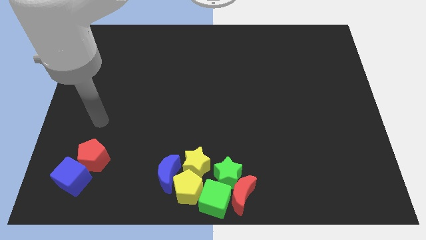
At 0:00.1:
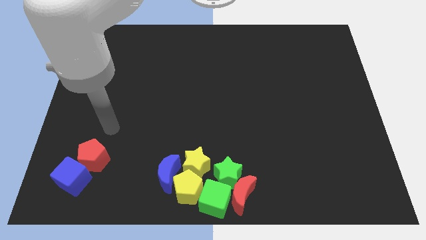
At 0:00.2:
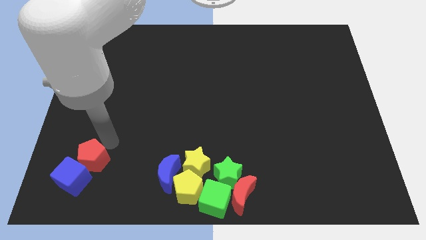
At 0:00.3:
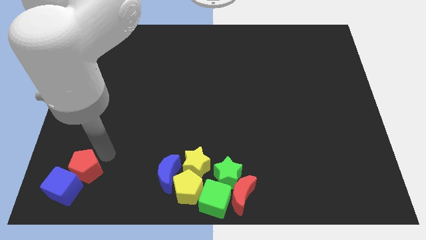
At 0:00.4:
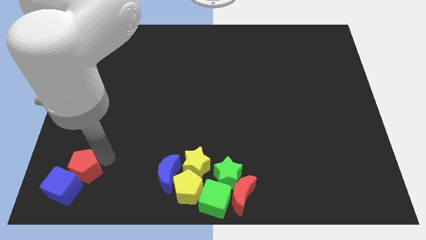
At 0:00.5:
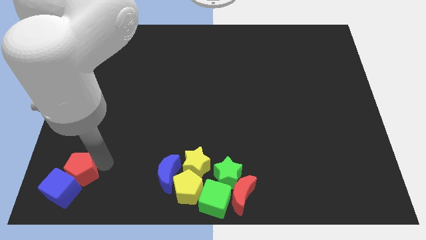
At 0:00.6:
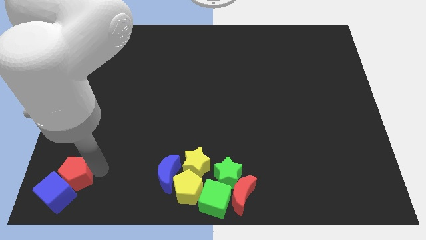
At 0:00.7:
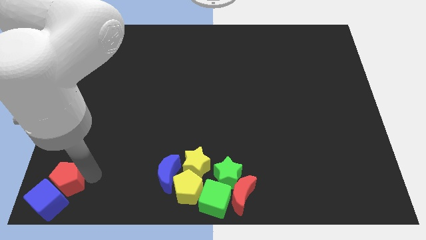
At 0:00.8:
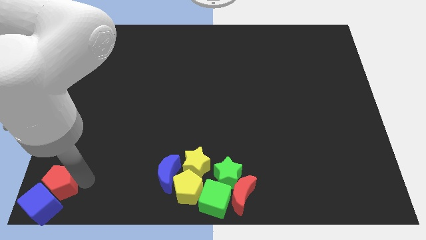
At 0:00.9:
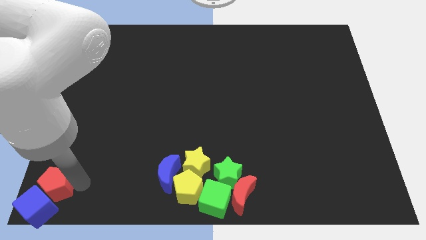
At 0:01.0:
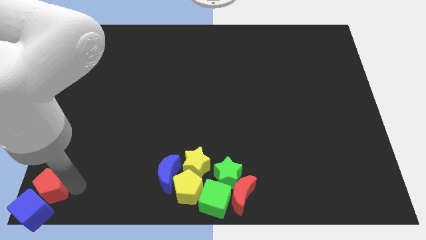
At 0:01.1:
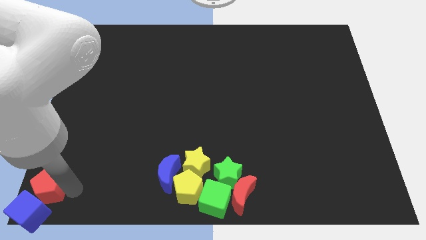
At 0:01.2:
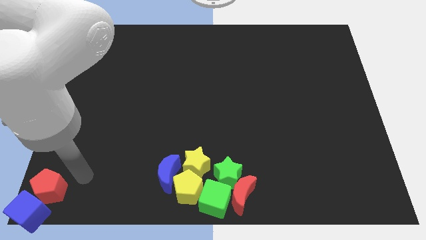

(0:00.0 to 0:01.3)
move the red pentagon and the blue cube to the bottom left corner of the board

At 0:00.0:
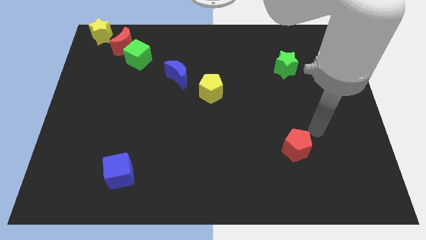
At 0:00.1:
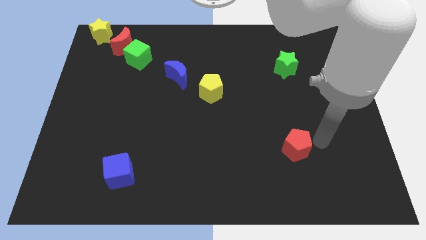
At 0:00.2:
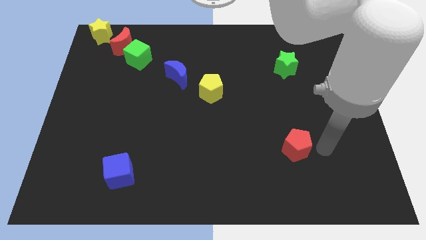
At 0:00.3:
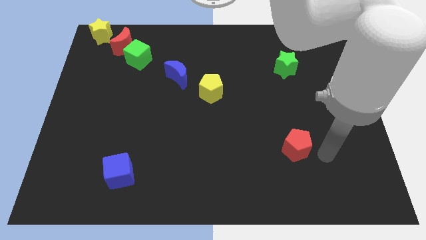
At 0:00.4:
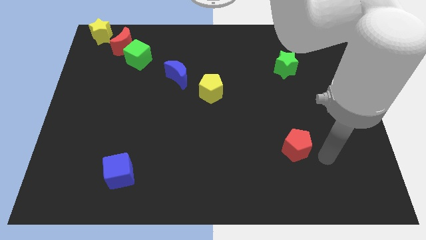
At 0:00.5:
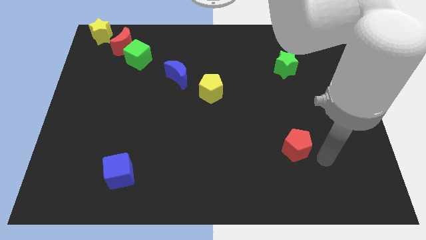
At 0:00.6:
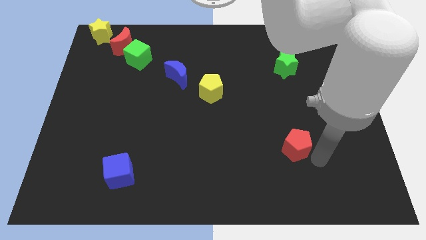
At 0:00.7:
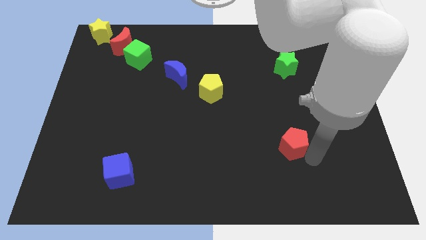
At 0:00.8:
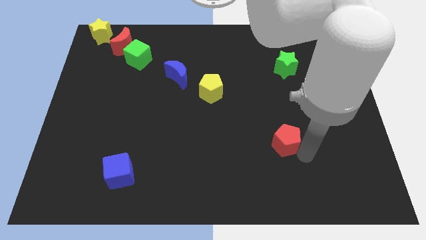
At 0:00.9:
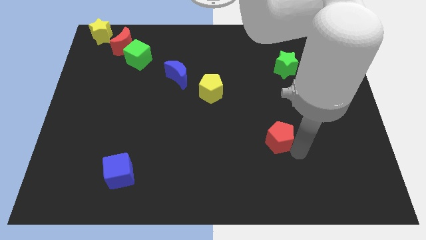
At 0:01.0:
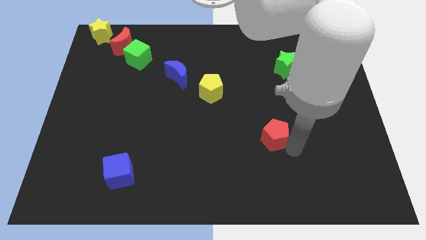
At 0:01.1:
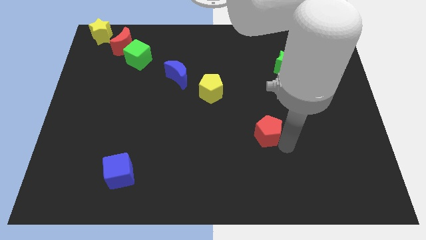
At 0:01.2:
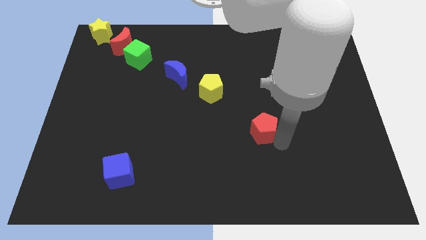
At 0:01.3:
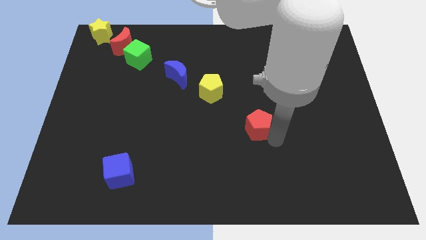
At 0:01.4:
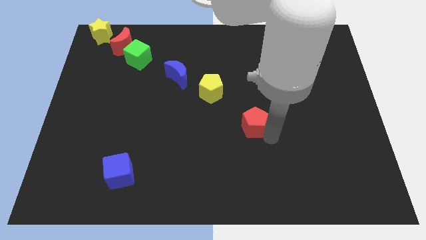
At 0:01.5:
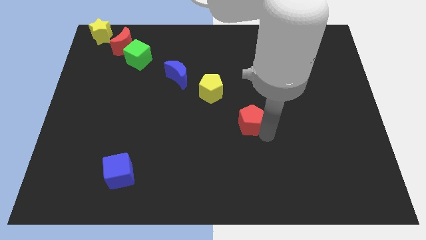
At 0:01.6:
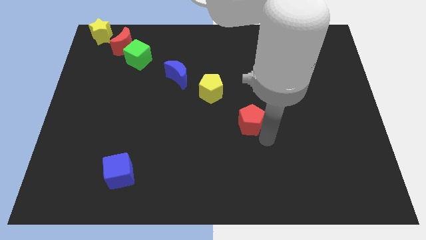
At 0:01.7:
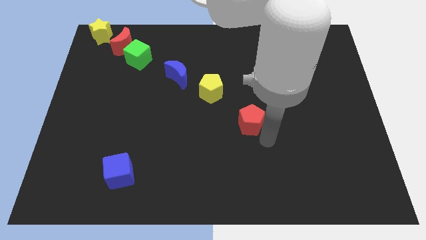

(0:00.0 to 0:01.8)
move the red pentagon towards the yellow pentagon

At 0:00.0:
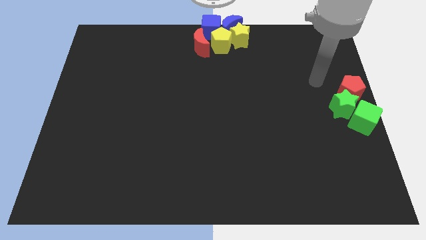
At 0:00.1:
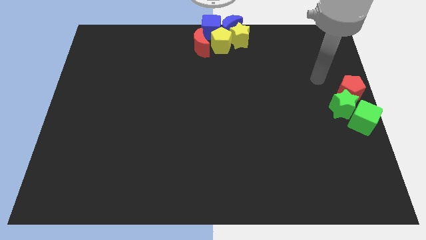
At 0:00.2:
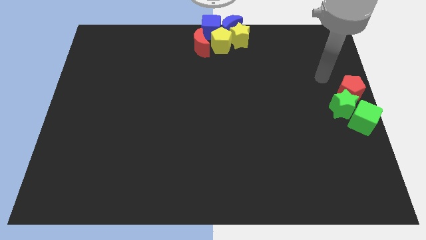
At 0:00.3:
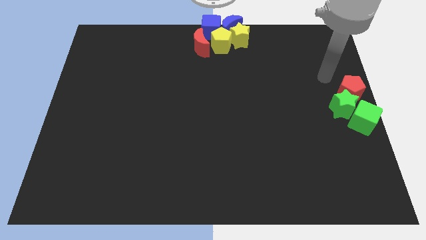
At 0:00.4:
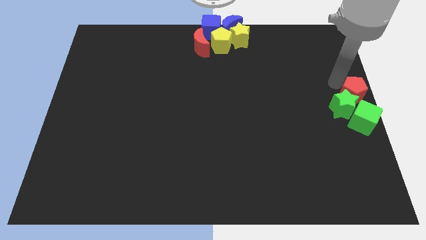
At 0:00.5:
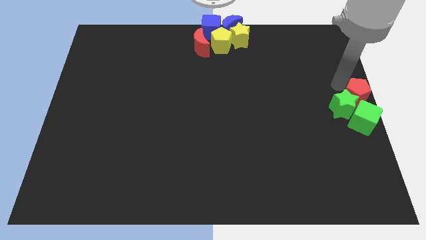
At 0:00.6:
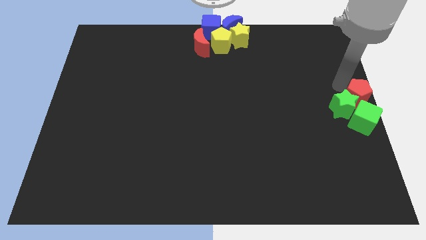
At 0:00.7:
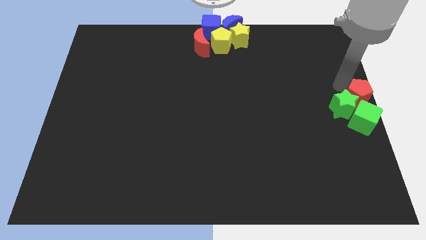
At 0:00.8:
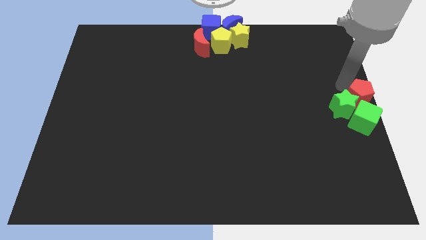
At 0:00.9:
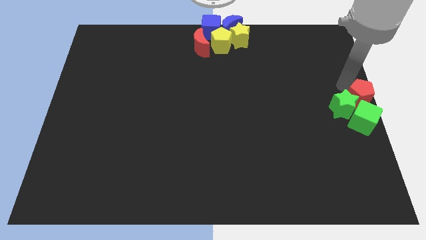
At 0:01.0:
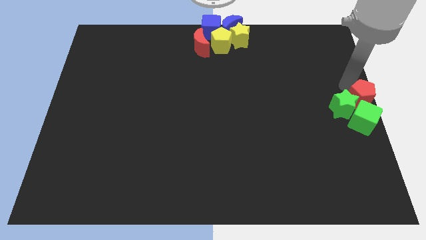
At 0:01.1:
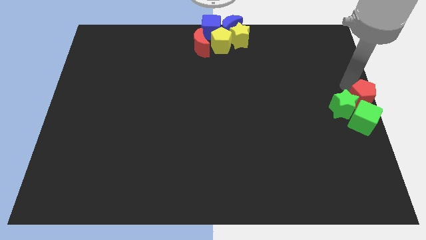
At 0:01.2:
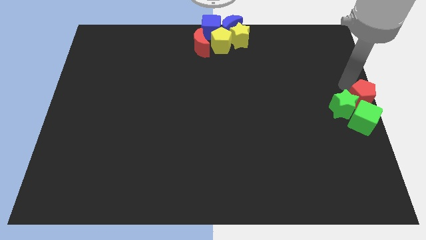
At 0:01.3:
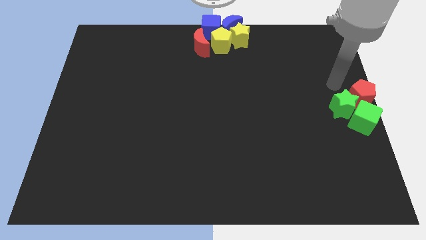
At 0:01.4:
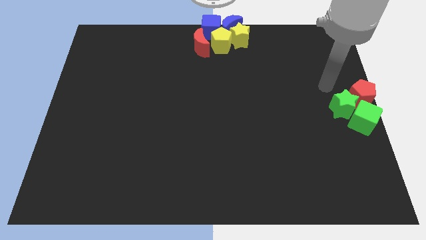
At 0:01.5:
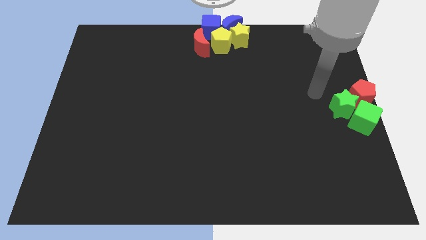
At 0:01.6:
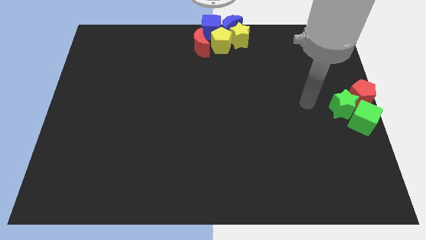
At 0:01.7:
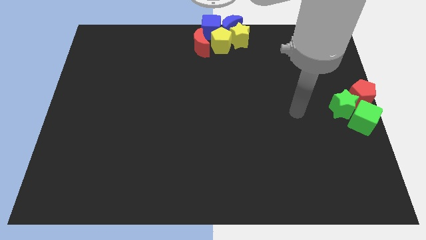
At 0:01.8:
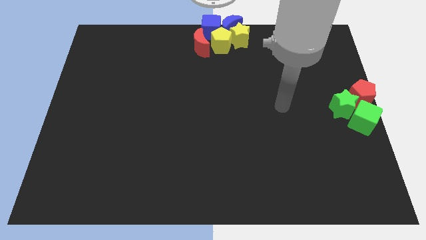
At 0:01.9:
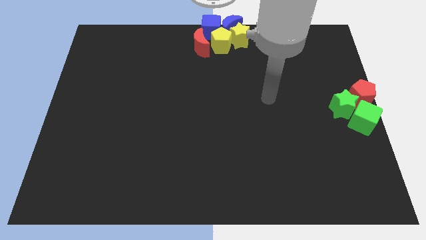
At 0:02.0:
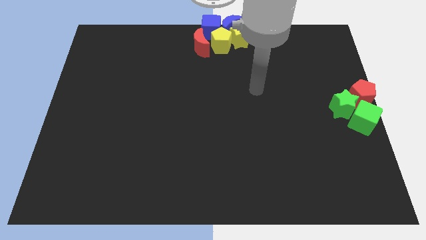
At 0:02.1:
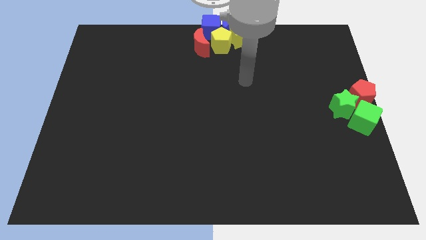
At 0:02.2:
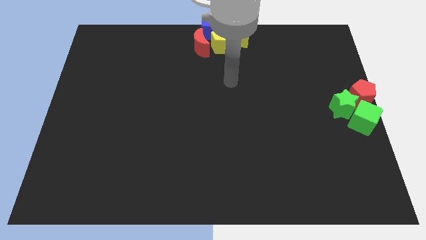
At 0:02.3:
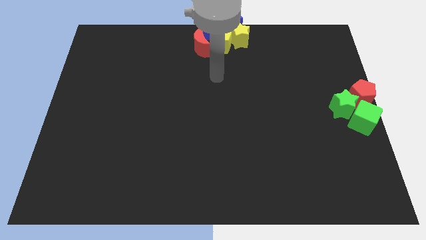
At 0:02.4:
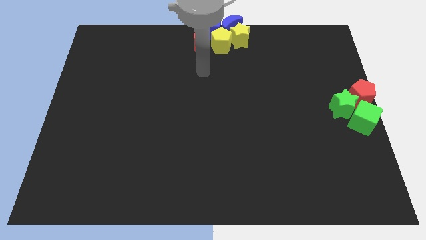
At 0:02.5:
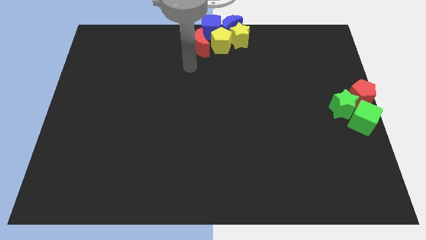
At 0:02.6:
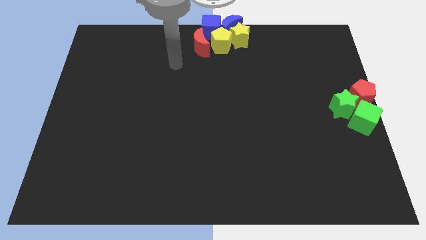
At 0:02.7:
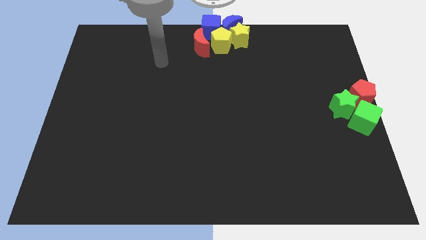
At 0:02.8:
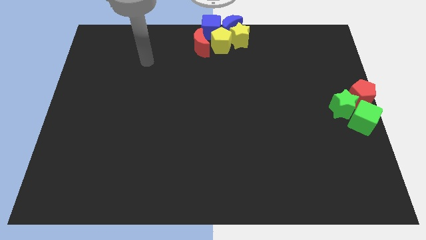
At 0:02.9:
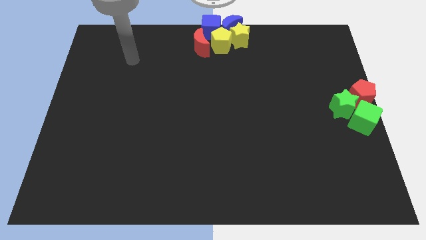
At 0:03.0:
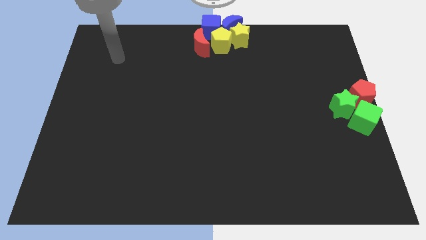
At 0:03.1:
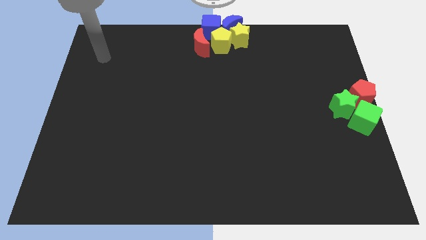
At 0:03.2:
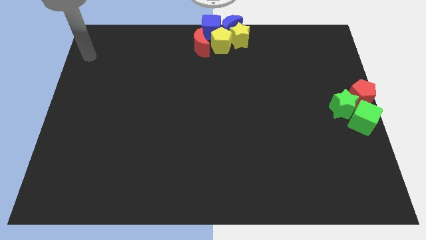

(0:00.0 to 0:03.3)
move your arm to the left top of the board

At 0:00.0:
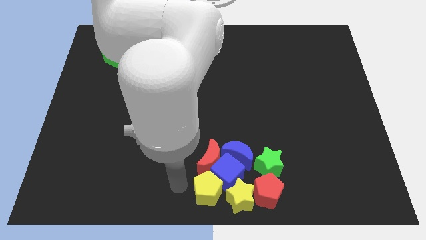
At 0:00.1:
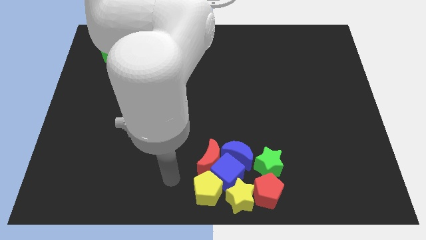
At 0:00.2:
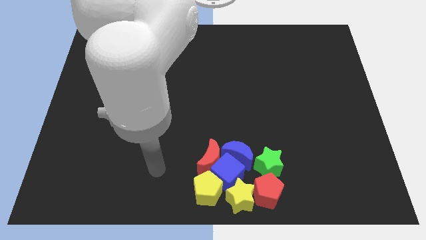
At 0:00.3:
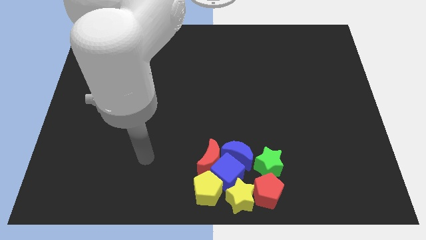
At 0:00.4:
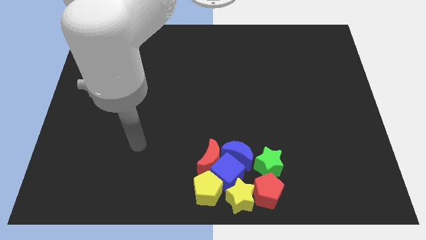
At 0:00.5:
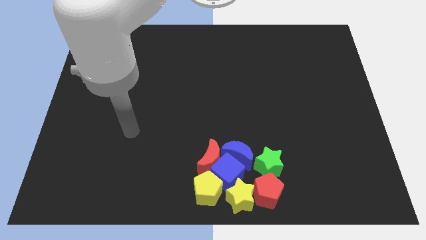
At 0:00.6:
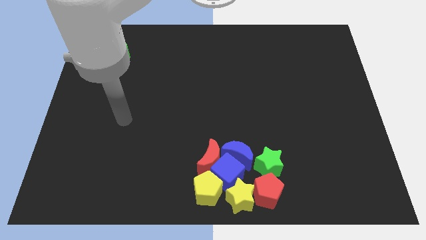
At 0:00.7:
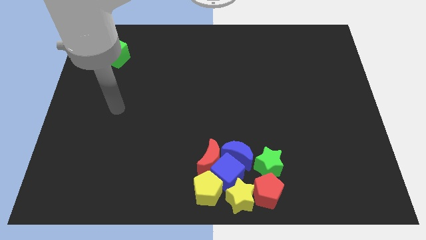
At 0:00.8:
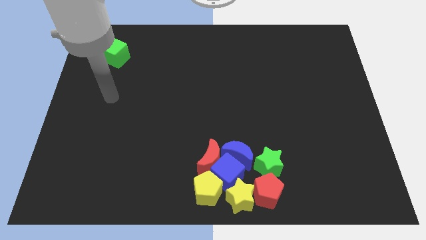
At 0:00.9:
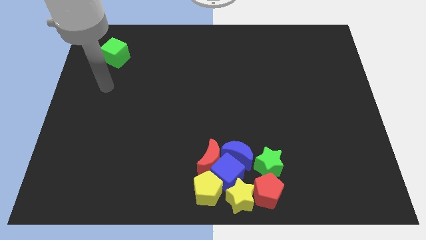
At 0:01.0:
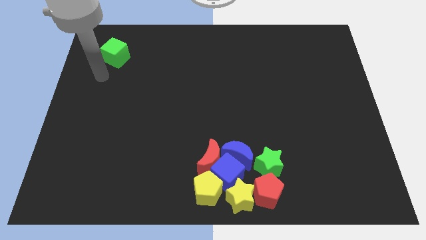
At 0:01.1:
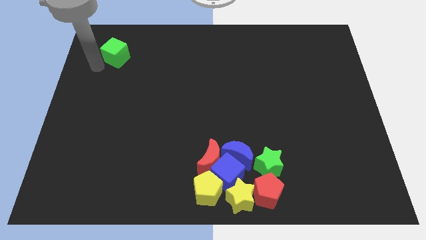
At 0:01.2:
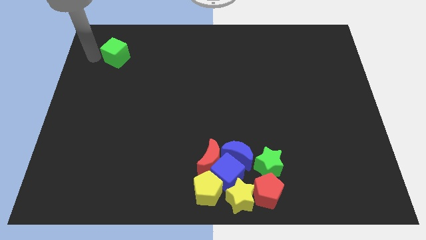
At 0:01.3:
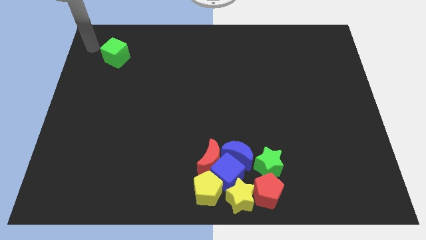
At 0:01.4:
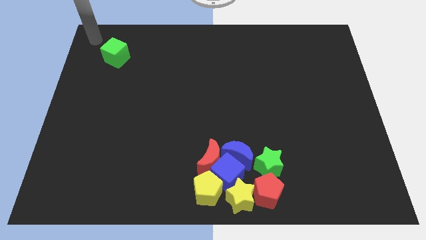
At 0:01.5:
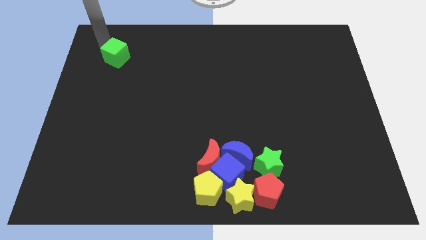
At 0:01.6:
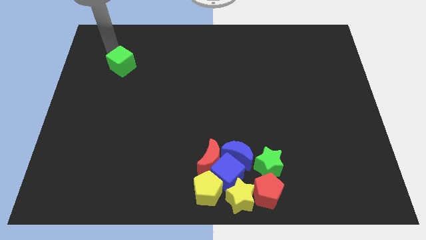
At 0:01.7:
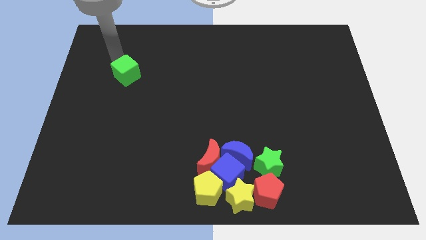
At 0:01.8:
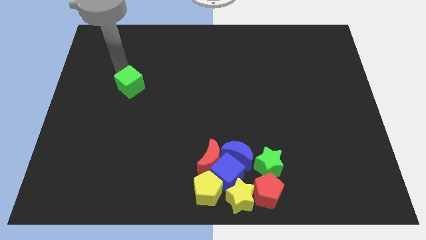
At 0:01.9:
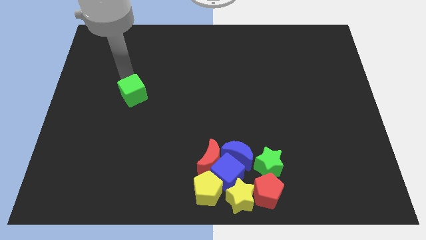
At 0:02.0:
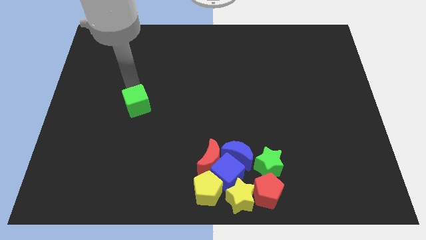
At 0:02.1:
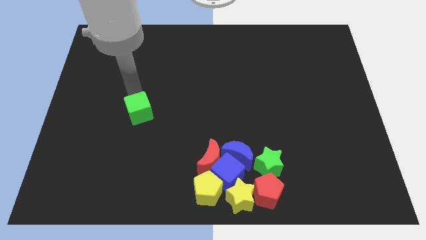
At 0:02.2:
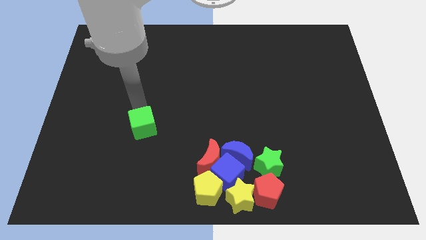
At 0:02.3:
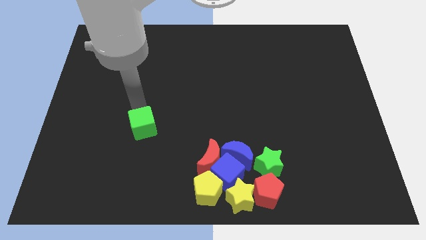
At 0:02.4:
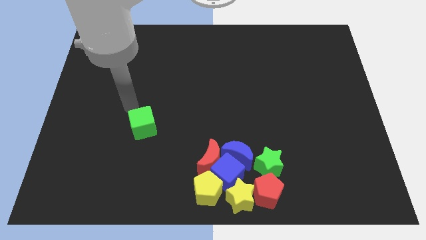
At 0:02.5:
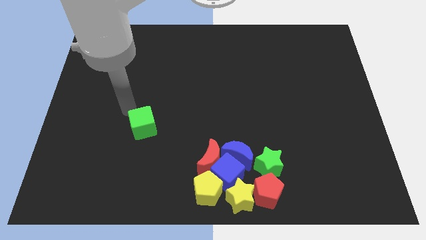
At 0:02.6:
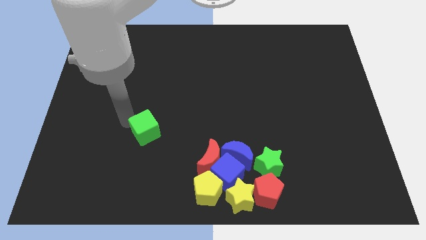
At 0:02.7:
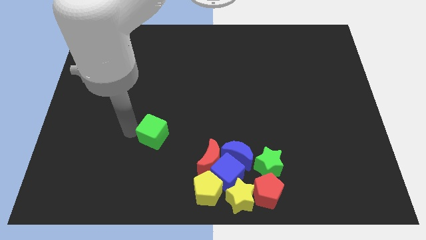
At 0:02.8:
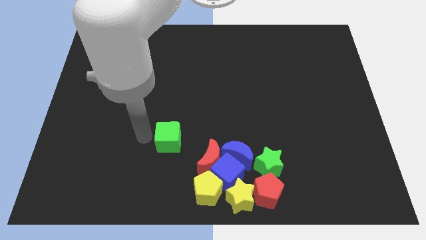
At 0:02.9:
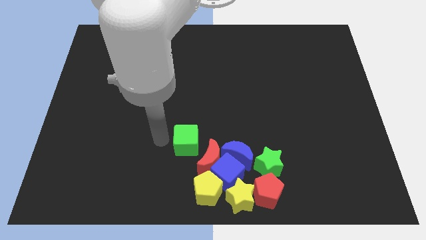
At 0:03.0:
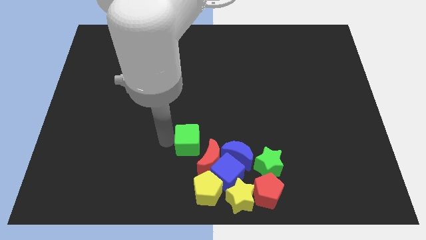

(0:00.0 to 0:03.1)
move the green cube towards the red moon
